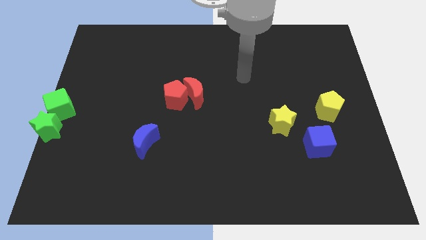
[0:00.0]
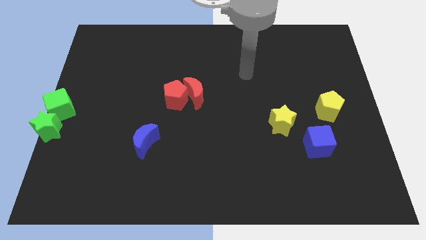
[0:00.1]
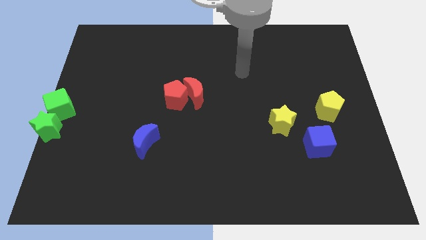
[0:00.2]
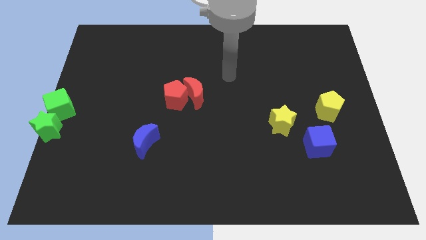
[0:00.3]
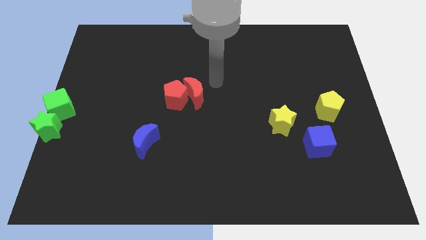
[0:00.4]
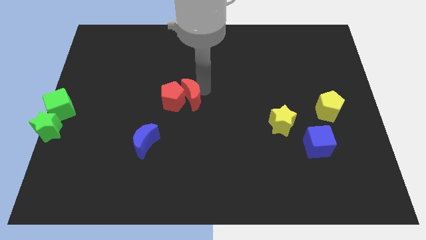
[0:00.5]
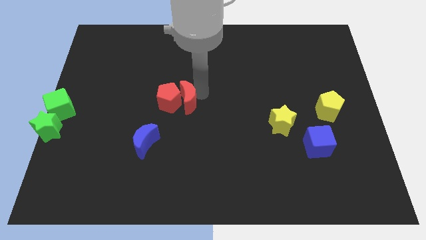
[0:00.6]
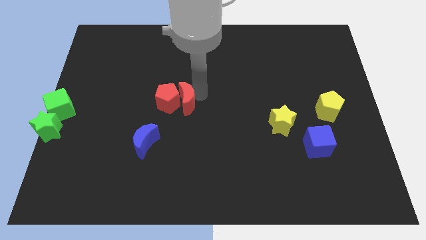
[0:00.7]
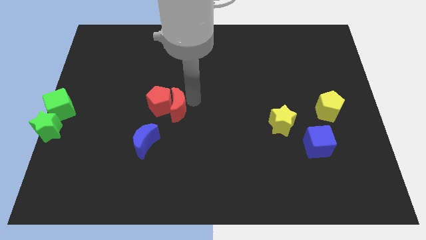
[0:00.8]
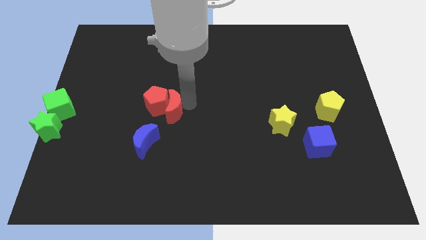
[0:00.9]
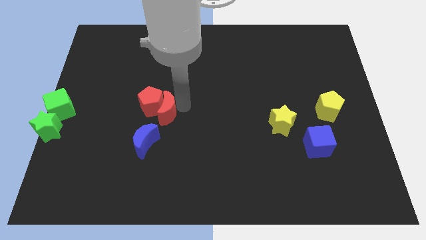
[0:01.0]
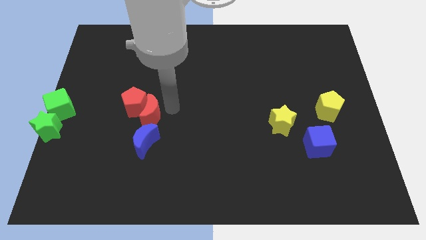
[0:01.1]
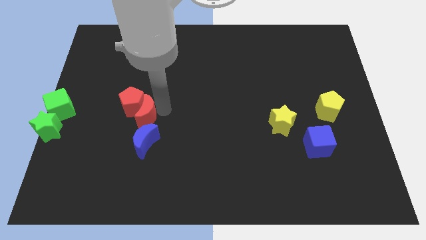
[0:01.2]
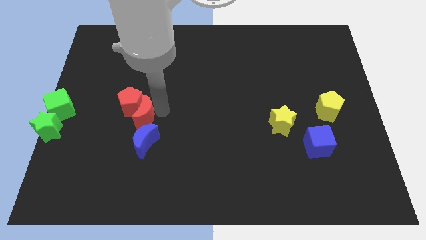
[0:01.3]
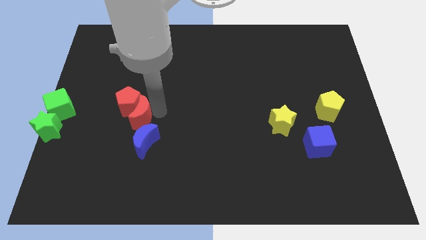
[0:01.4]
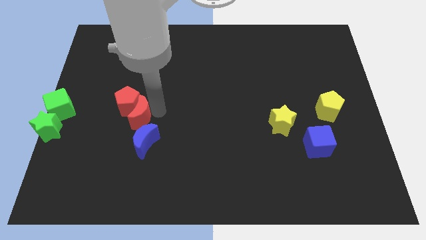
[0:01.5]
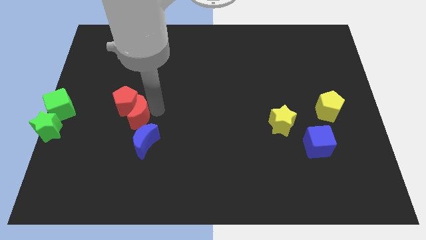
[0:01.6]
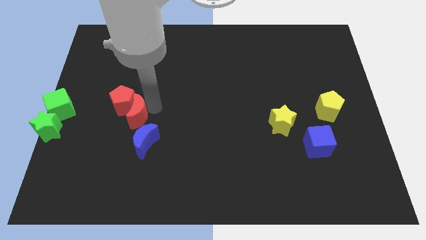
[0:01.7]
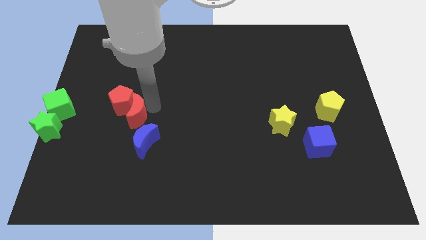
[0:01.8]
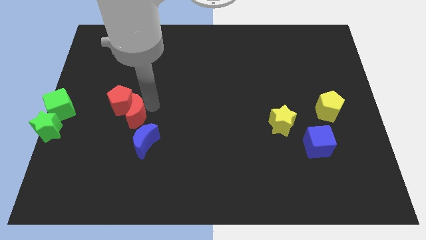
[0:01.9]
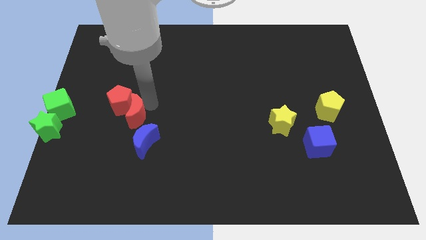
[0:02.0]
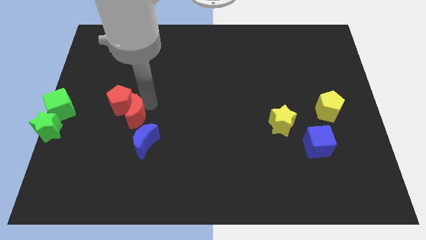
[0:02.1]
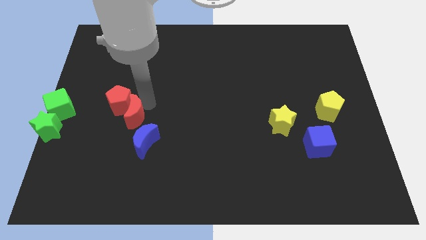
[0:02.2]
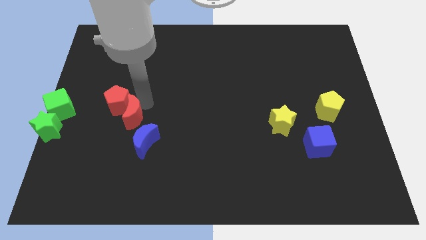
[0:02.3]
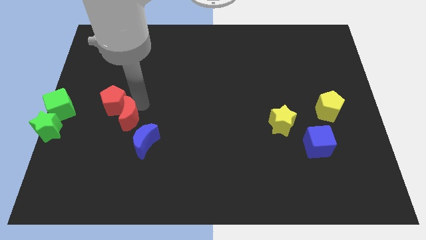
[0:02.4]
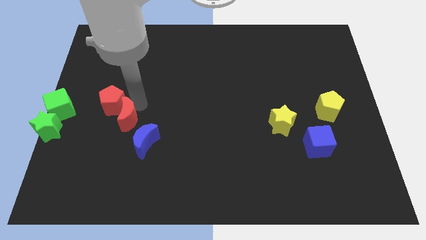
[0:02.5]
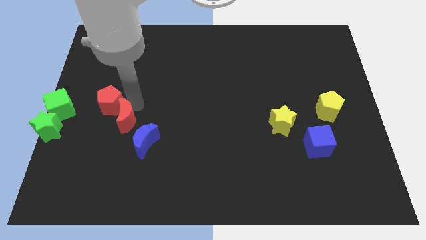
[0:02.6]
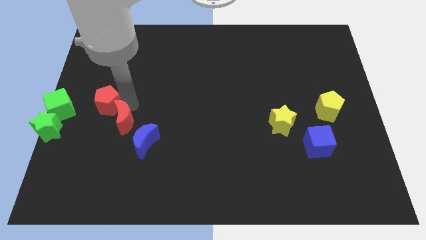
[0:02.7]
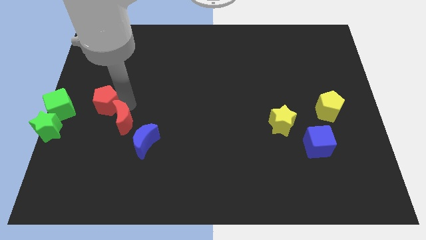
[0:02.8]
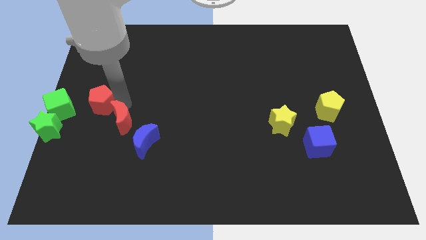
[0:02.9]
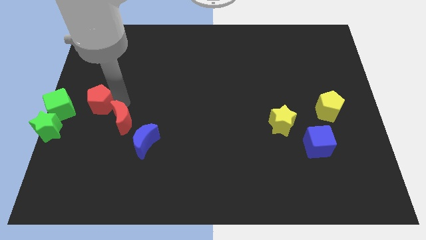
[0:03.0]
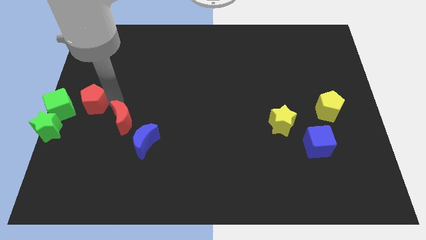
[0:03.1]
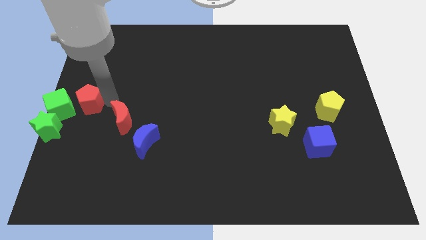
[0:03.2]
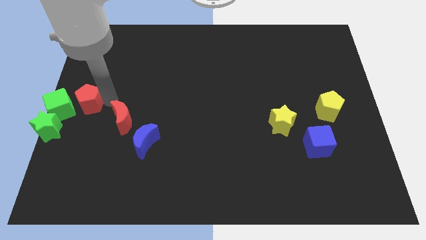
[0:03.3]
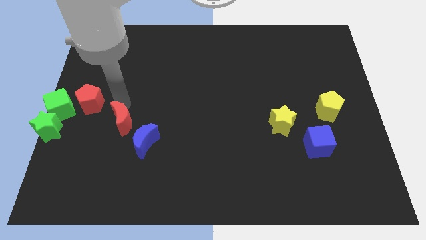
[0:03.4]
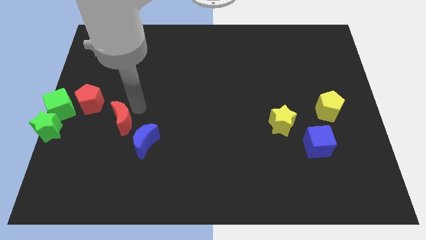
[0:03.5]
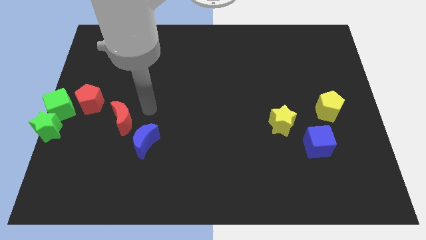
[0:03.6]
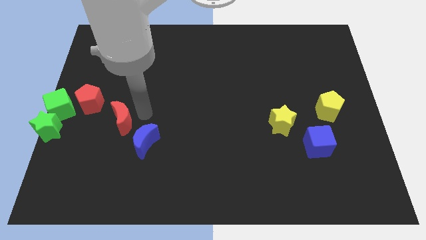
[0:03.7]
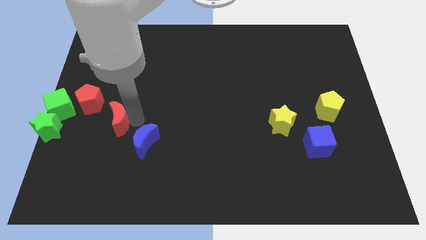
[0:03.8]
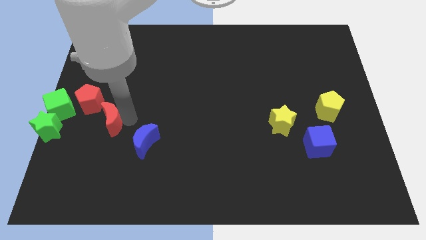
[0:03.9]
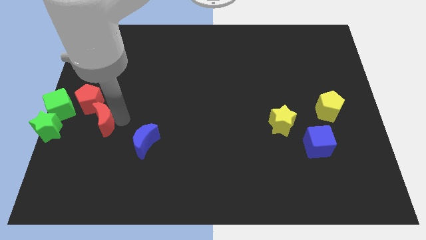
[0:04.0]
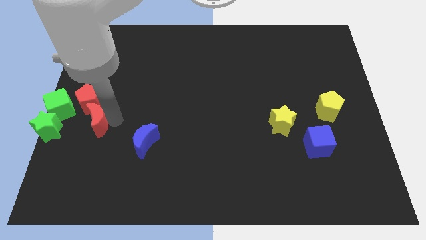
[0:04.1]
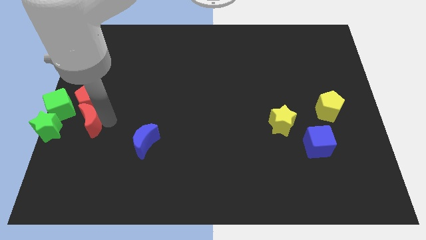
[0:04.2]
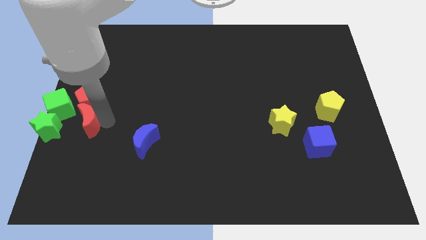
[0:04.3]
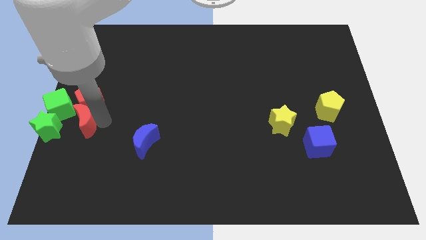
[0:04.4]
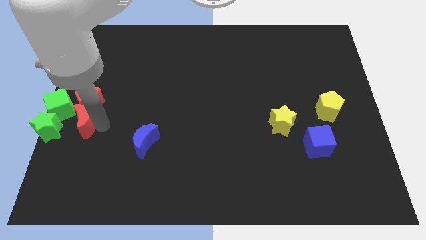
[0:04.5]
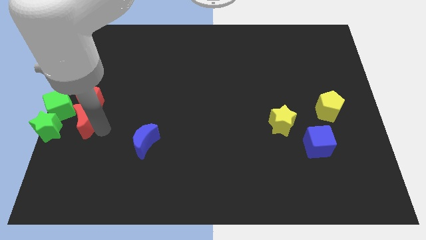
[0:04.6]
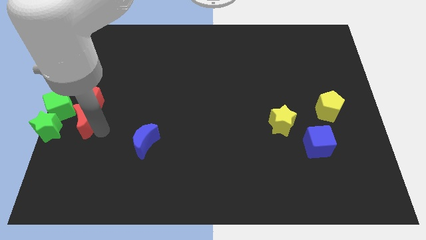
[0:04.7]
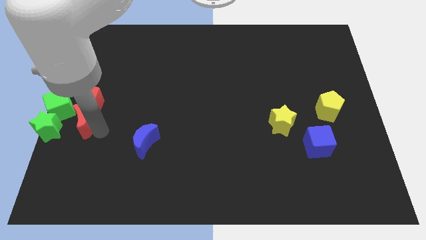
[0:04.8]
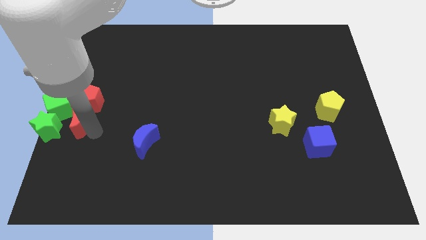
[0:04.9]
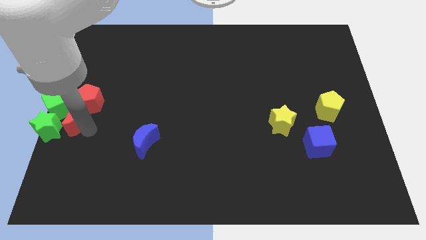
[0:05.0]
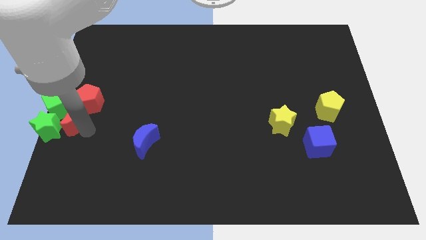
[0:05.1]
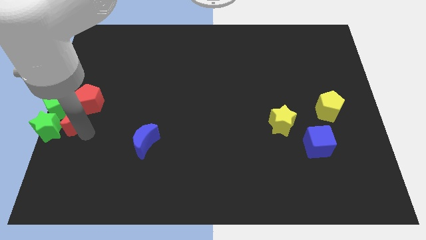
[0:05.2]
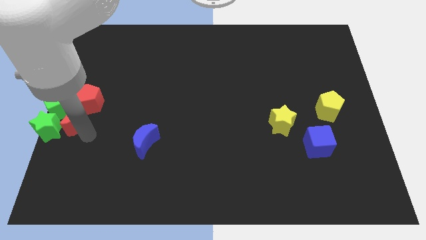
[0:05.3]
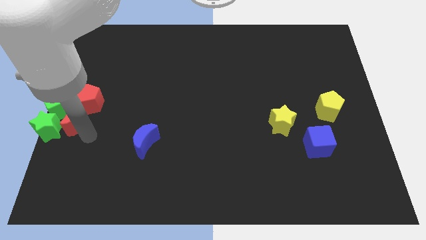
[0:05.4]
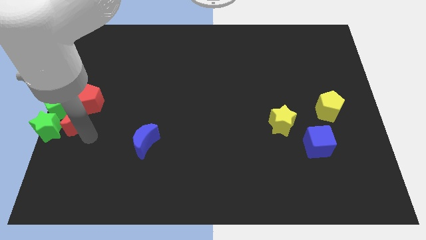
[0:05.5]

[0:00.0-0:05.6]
move the red crescent along with the red pentagon to the center left

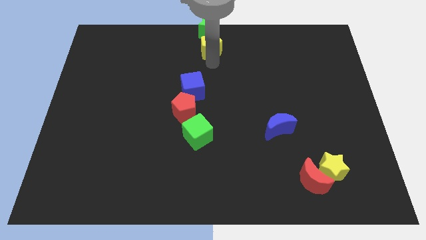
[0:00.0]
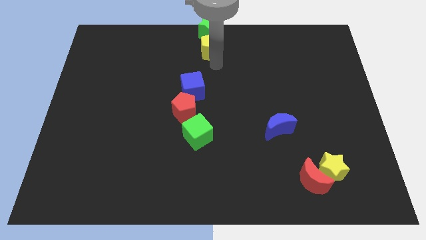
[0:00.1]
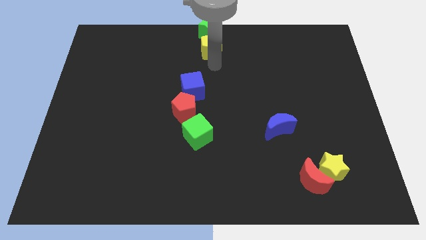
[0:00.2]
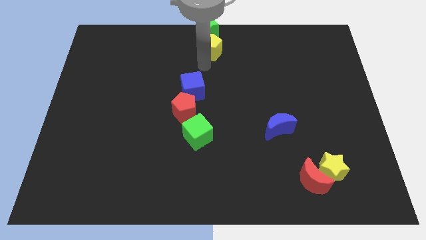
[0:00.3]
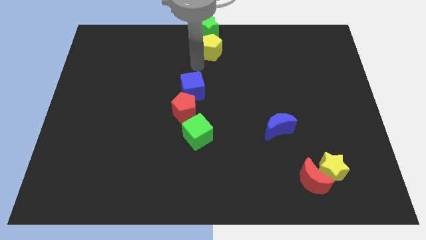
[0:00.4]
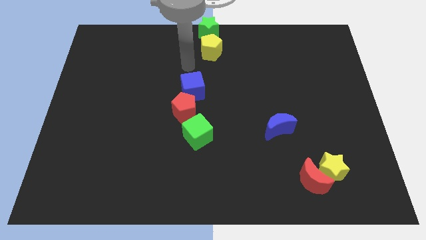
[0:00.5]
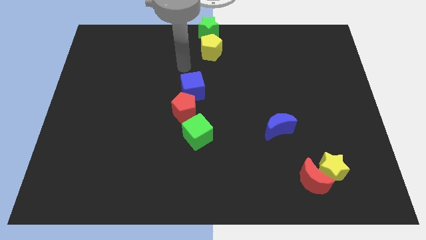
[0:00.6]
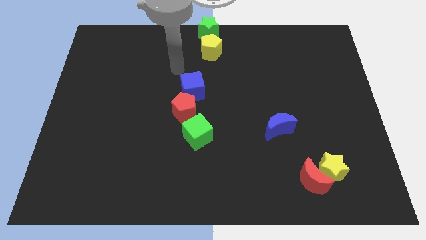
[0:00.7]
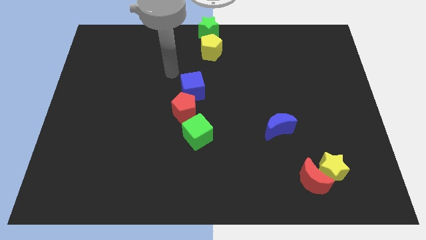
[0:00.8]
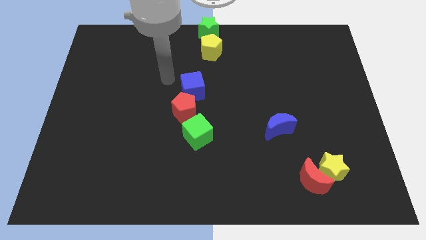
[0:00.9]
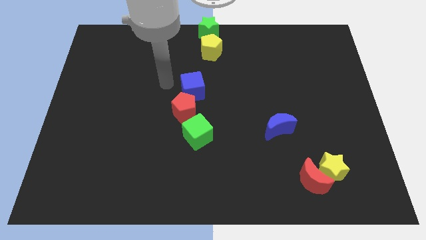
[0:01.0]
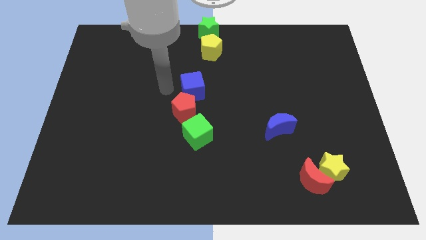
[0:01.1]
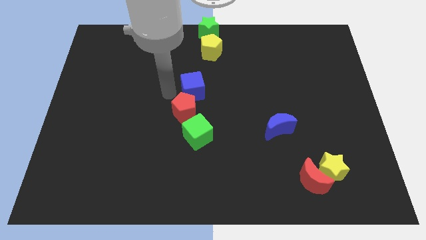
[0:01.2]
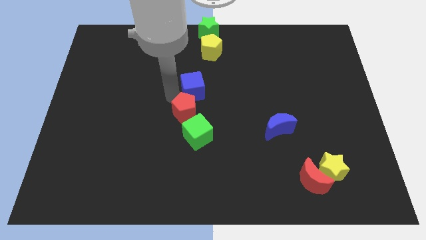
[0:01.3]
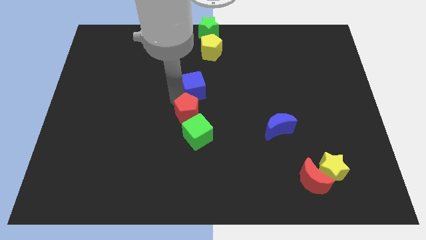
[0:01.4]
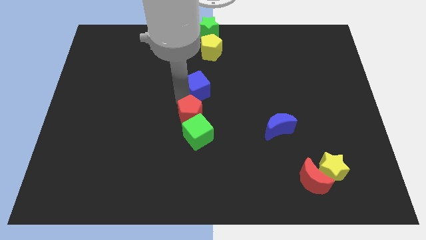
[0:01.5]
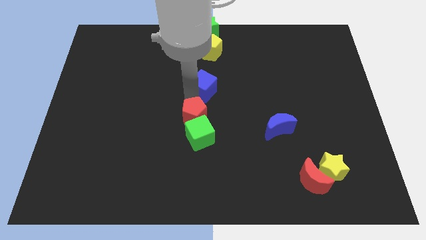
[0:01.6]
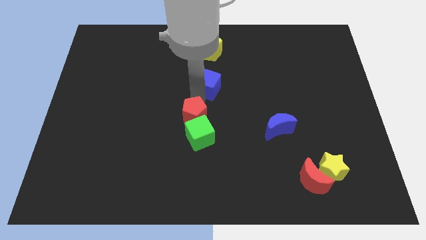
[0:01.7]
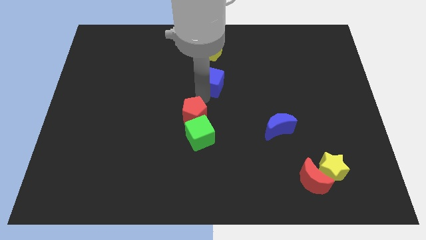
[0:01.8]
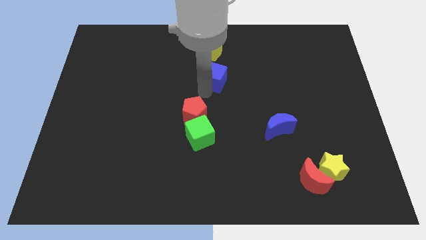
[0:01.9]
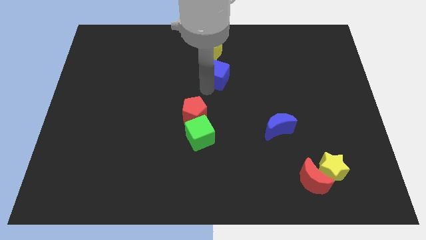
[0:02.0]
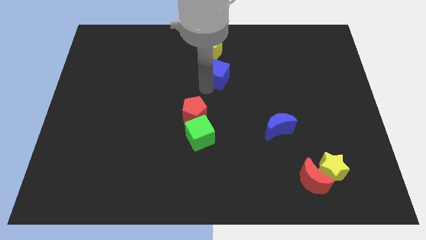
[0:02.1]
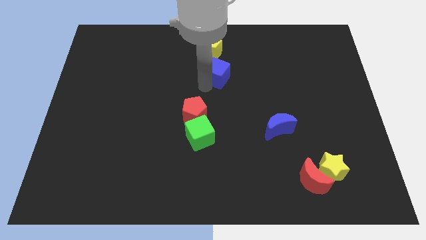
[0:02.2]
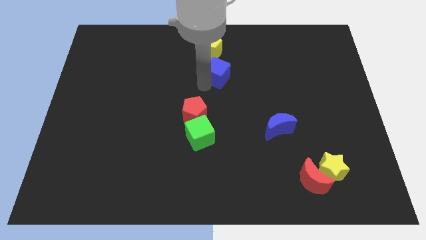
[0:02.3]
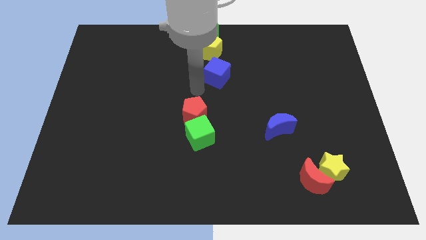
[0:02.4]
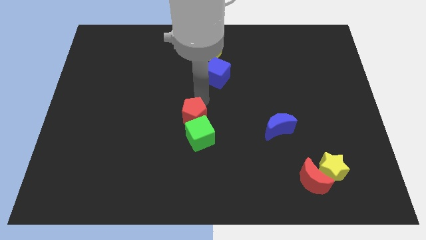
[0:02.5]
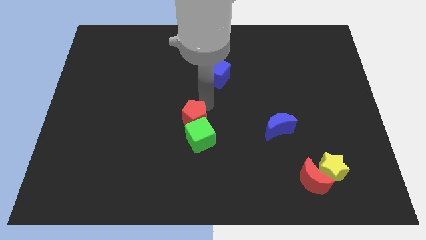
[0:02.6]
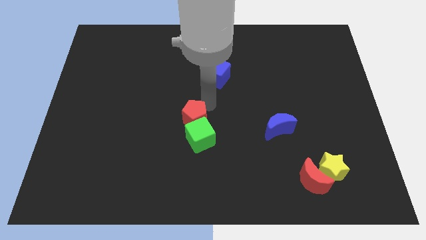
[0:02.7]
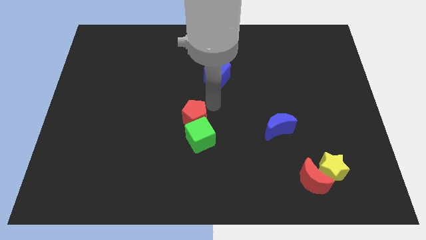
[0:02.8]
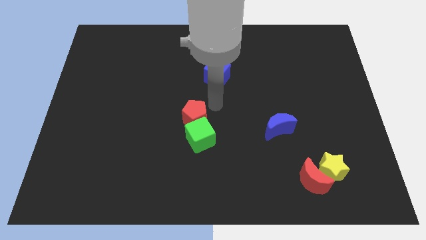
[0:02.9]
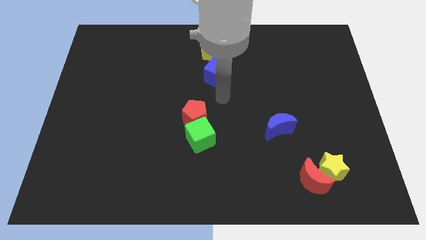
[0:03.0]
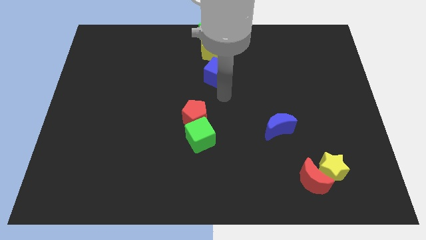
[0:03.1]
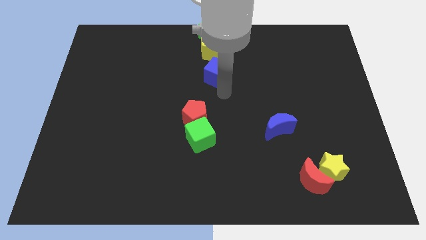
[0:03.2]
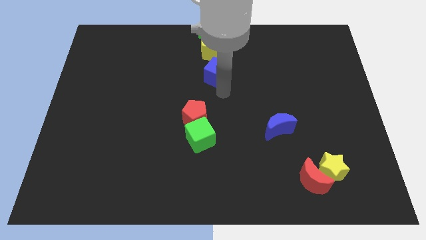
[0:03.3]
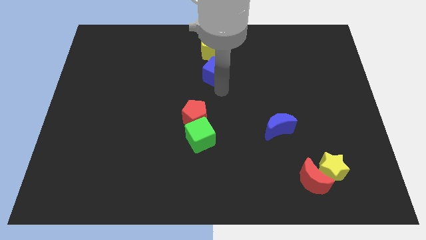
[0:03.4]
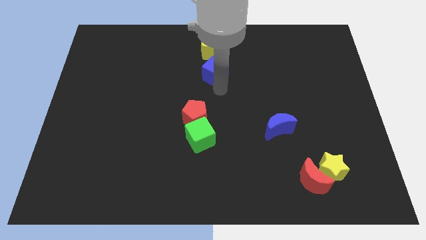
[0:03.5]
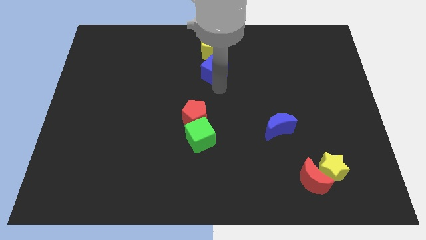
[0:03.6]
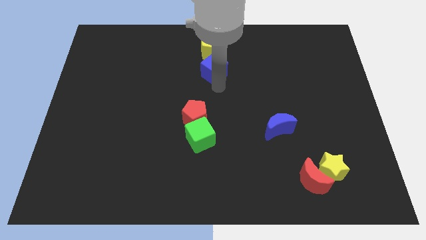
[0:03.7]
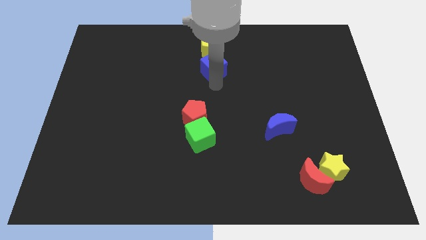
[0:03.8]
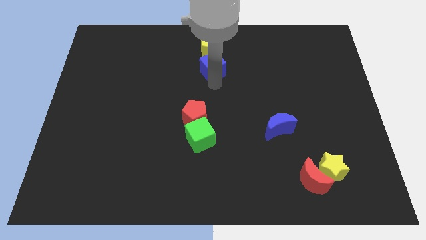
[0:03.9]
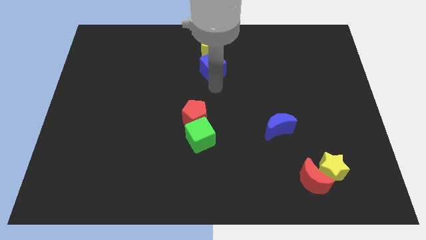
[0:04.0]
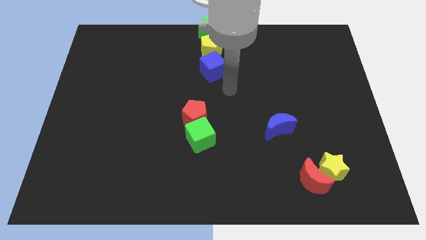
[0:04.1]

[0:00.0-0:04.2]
push the blue cube to the bottom of the yellow pentagon
